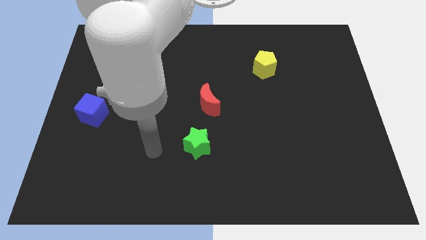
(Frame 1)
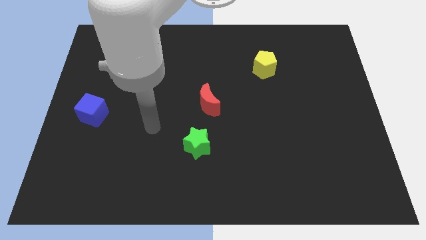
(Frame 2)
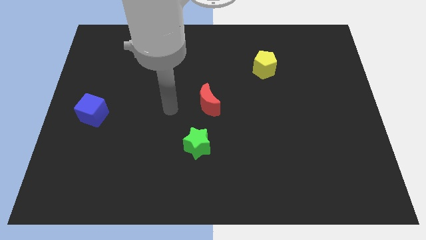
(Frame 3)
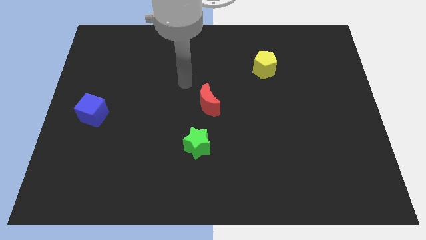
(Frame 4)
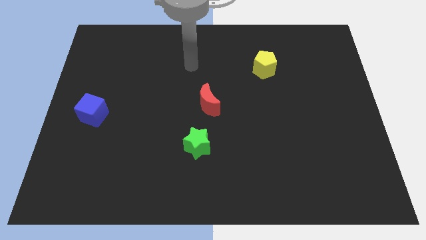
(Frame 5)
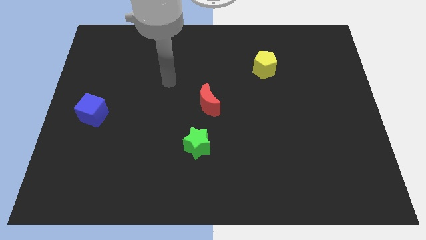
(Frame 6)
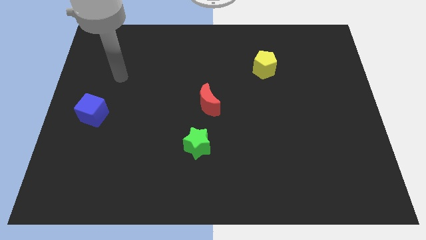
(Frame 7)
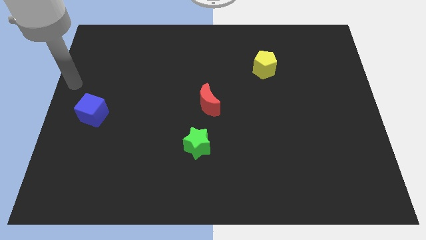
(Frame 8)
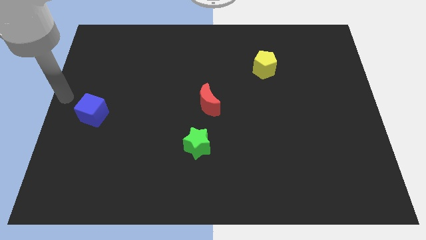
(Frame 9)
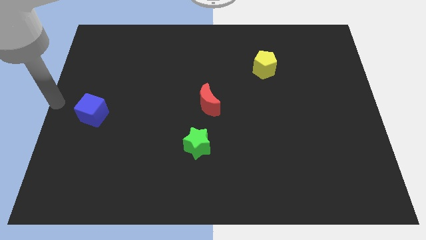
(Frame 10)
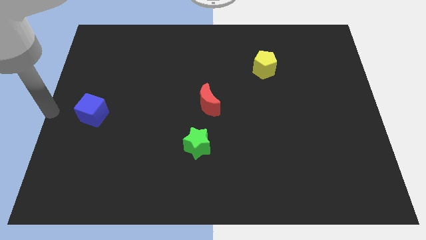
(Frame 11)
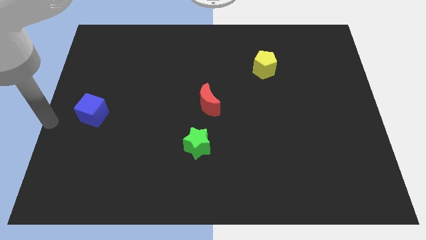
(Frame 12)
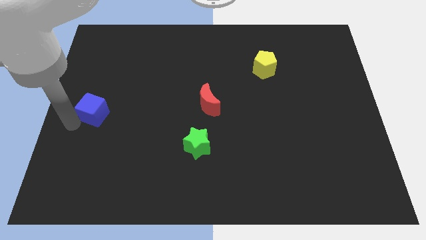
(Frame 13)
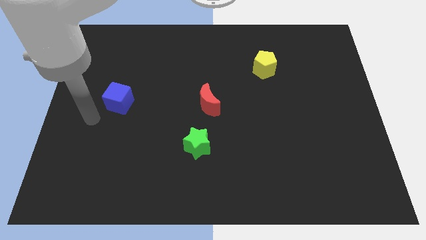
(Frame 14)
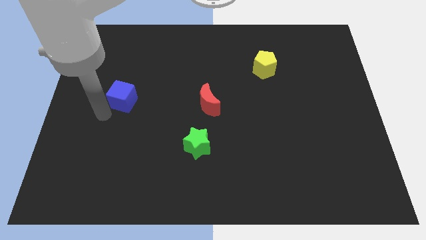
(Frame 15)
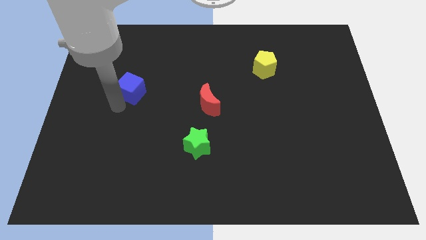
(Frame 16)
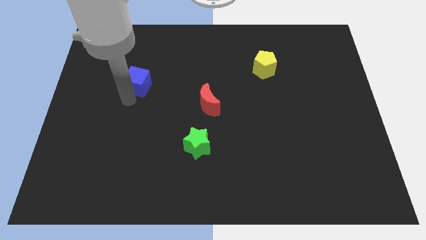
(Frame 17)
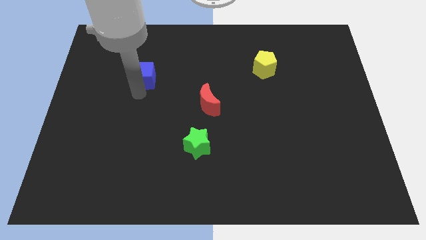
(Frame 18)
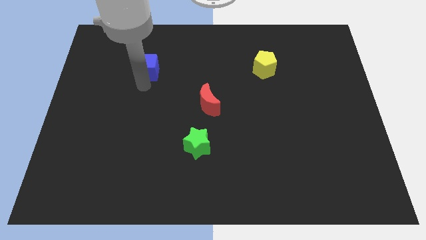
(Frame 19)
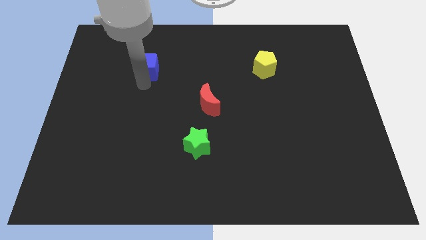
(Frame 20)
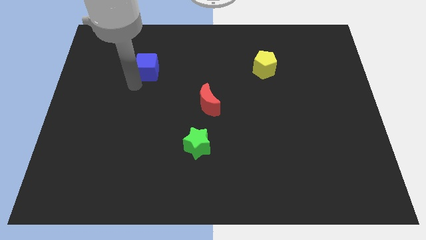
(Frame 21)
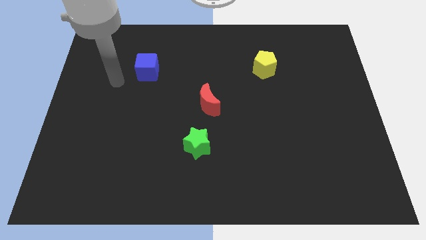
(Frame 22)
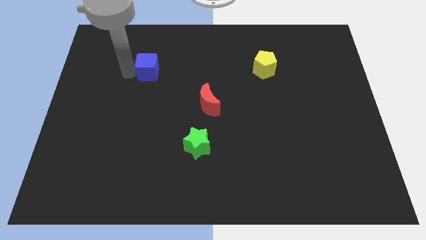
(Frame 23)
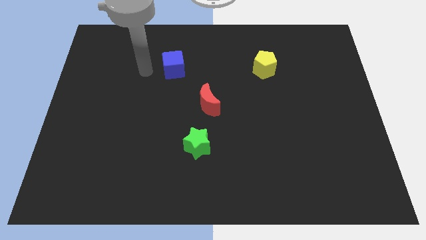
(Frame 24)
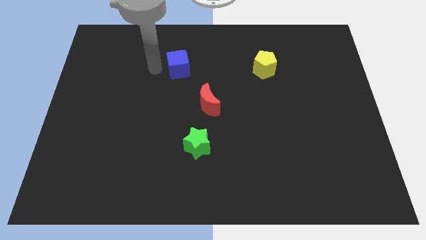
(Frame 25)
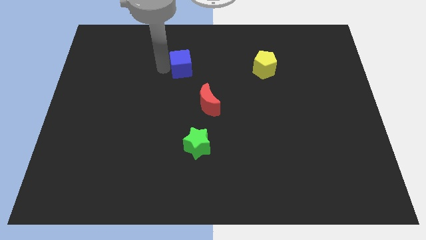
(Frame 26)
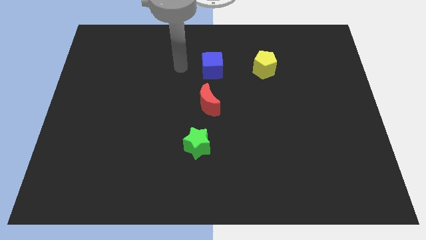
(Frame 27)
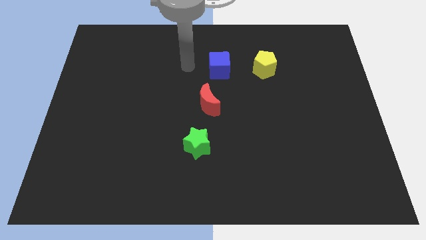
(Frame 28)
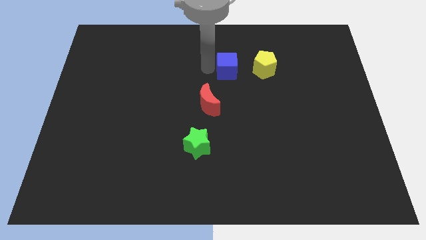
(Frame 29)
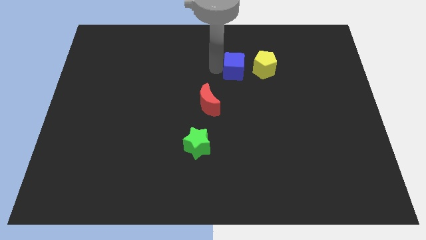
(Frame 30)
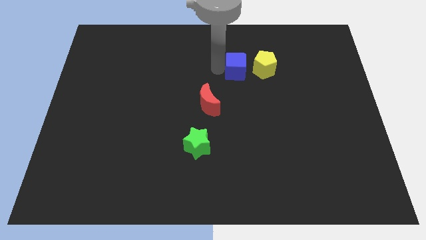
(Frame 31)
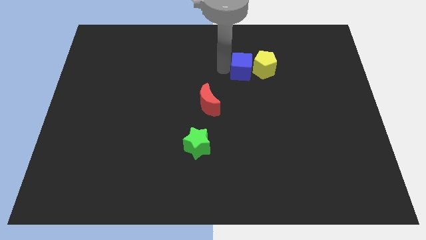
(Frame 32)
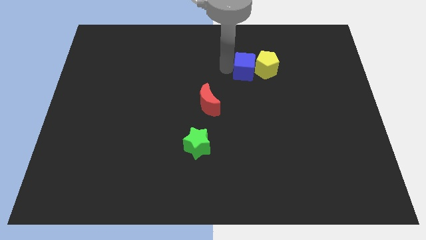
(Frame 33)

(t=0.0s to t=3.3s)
slide the cube to the pentagon

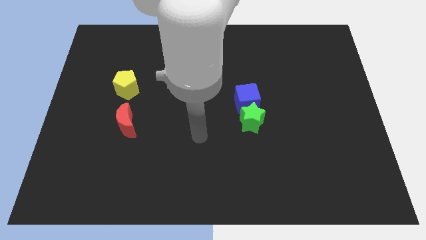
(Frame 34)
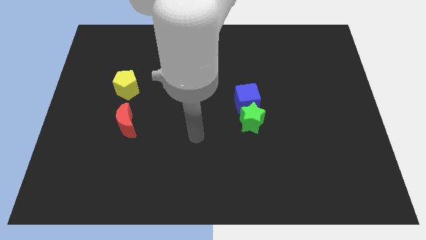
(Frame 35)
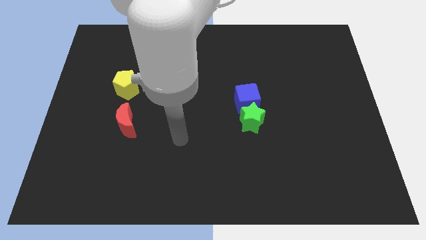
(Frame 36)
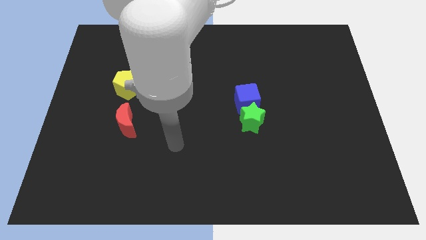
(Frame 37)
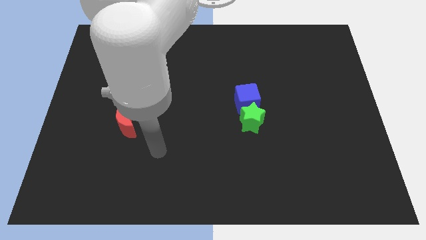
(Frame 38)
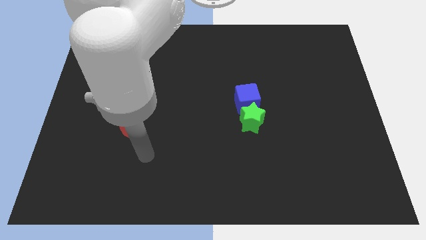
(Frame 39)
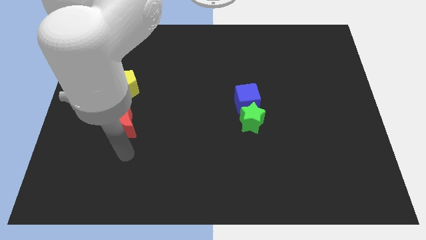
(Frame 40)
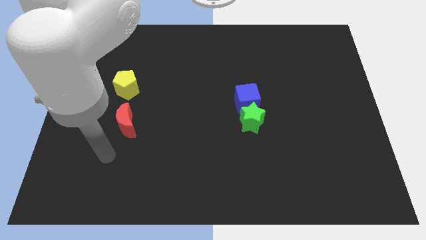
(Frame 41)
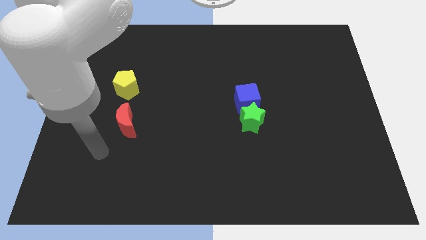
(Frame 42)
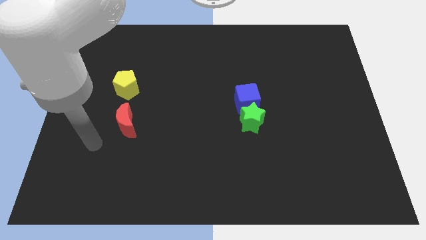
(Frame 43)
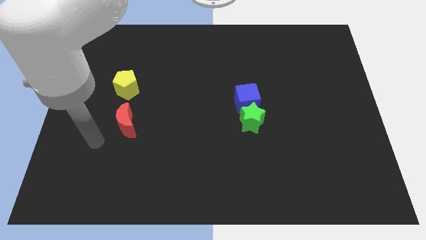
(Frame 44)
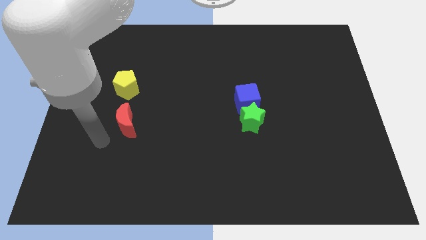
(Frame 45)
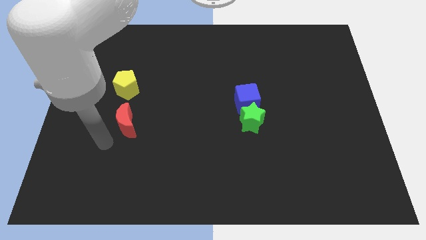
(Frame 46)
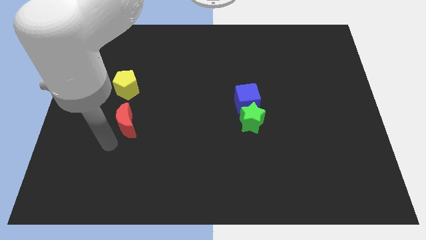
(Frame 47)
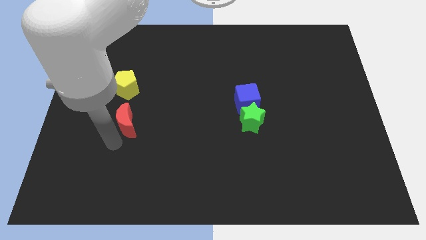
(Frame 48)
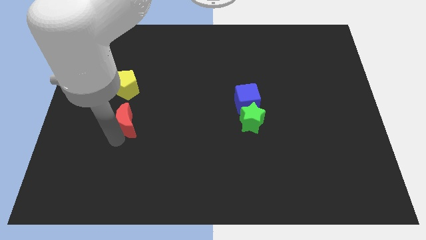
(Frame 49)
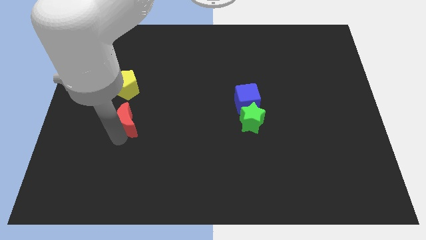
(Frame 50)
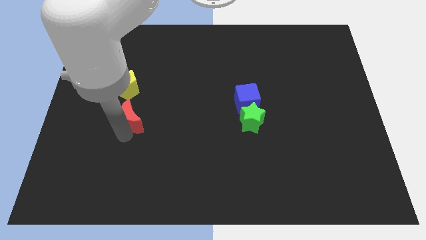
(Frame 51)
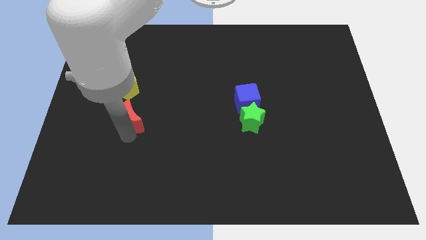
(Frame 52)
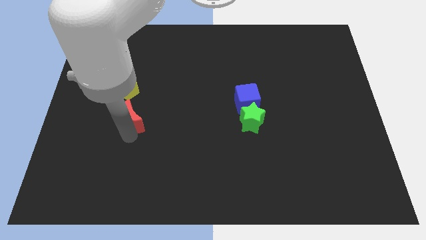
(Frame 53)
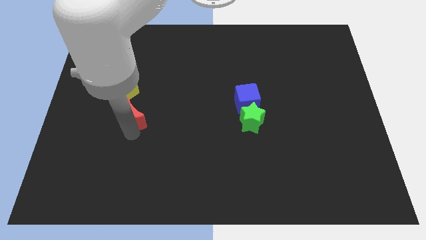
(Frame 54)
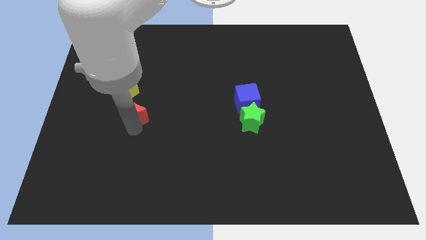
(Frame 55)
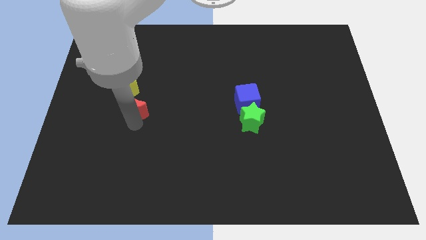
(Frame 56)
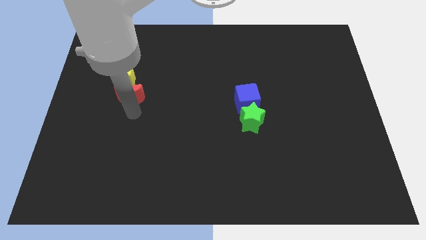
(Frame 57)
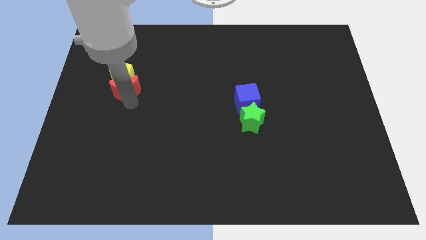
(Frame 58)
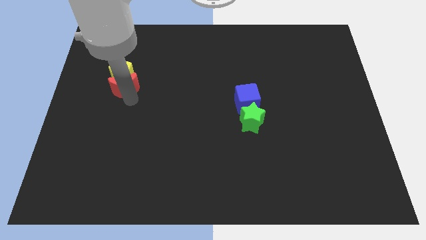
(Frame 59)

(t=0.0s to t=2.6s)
move the red block next to the yellow pentagon

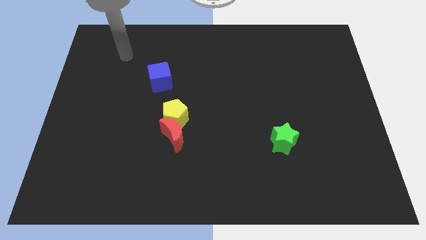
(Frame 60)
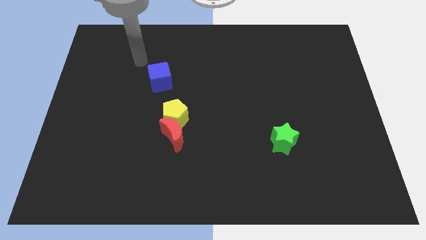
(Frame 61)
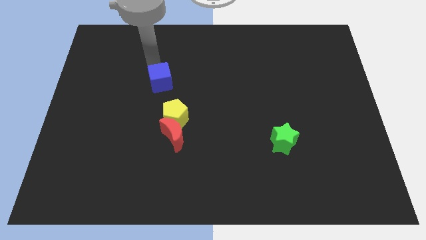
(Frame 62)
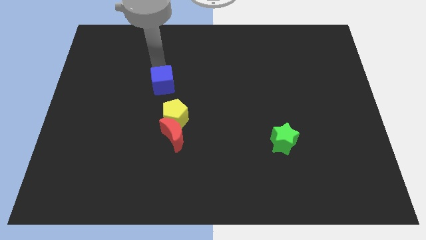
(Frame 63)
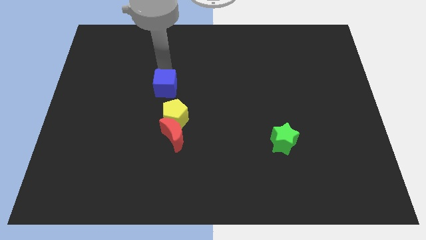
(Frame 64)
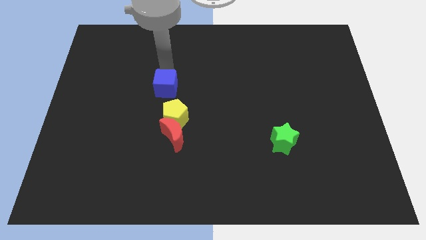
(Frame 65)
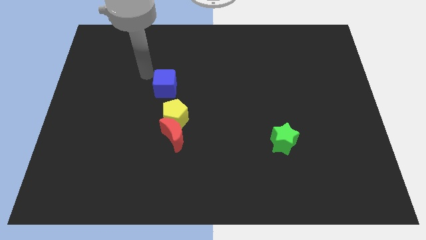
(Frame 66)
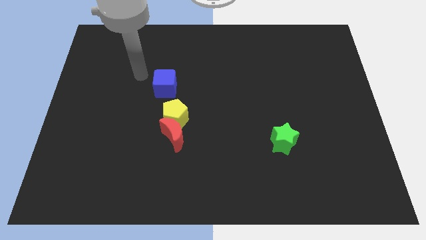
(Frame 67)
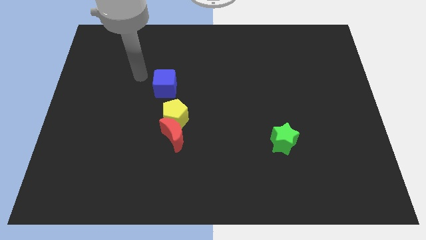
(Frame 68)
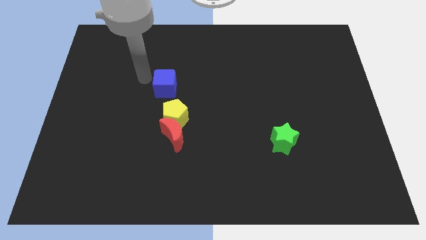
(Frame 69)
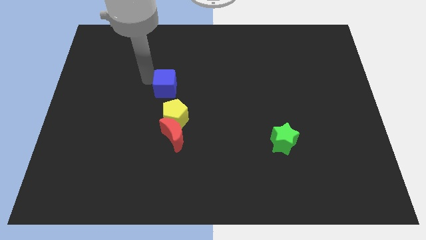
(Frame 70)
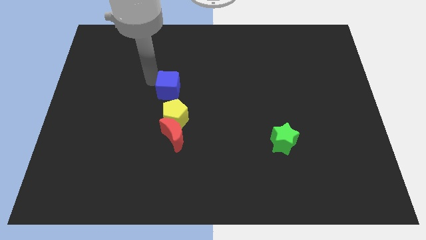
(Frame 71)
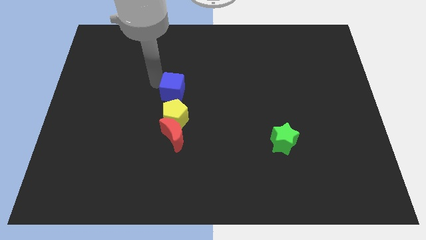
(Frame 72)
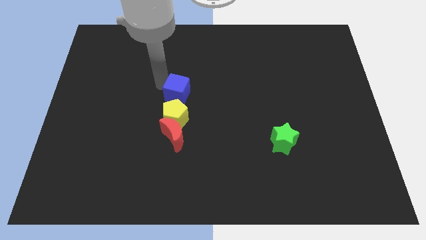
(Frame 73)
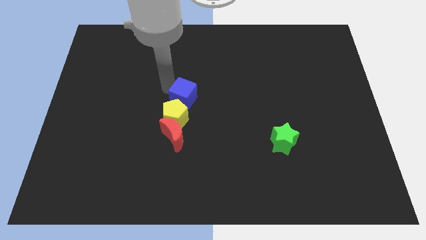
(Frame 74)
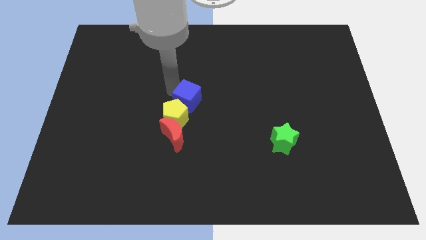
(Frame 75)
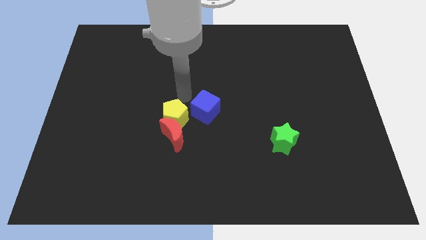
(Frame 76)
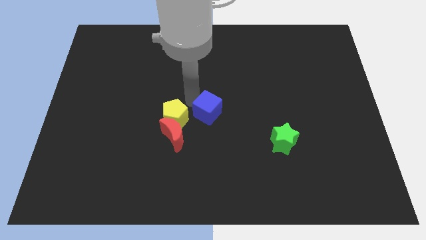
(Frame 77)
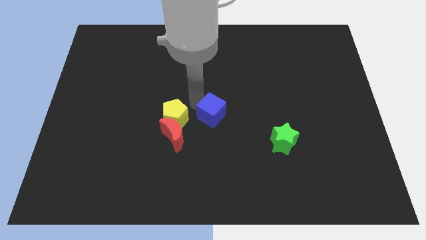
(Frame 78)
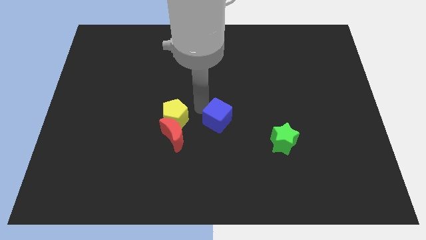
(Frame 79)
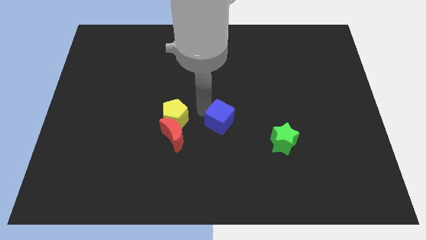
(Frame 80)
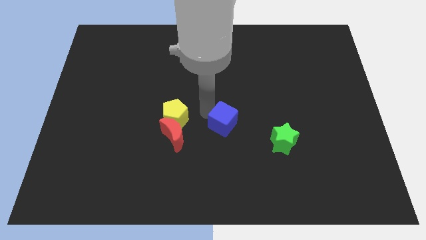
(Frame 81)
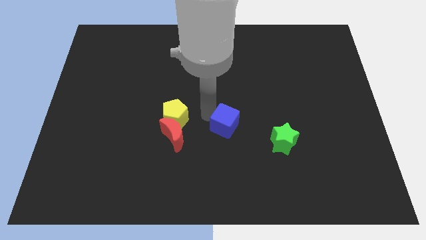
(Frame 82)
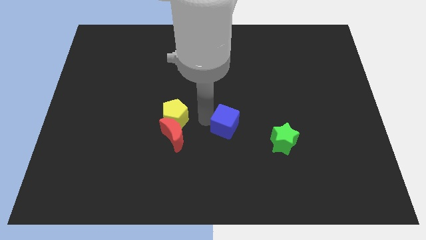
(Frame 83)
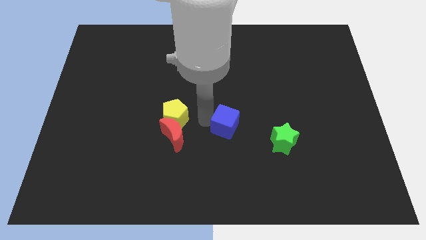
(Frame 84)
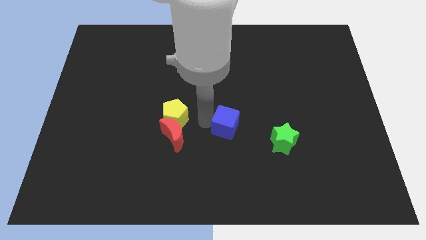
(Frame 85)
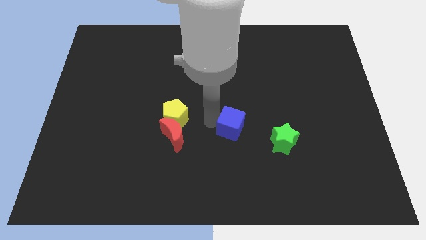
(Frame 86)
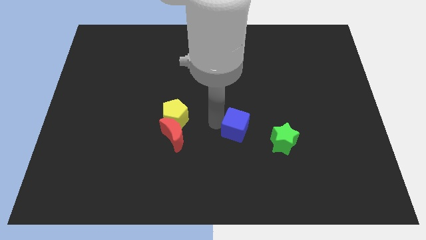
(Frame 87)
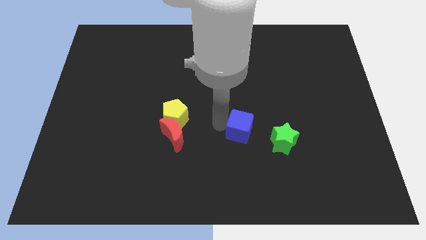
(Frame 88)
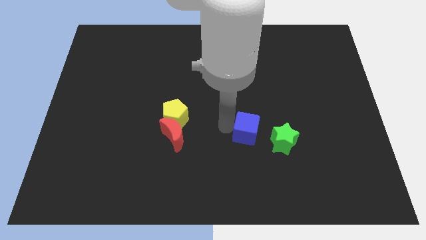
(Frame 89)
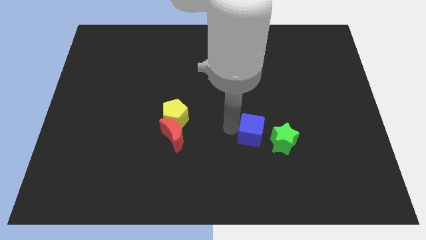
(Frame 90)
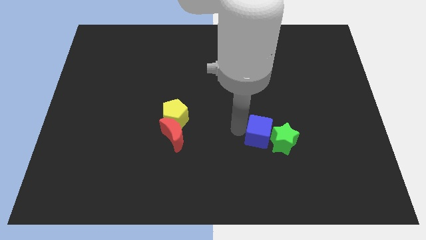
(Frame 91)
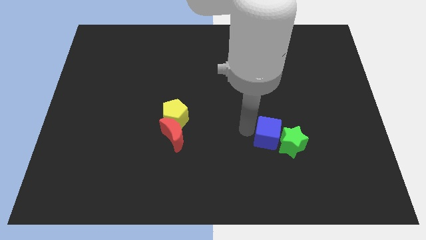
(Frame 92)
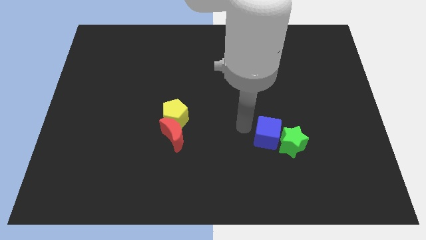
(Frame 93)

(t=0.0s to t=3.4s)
move the cube close to the green star
